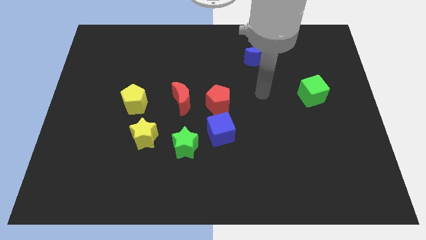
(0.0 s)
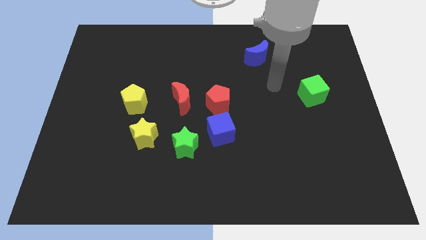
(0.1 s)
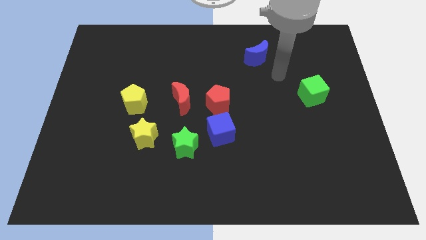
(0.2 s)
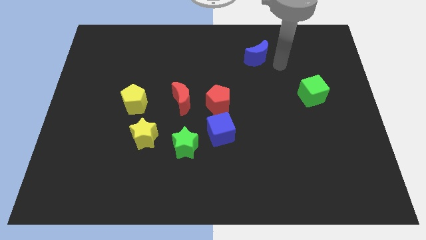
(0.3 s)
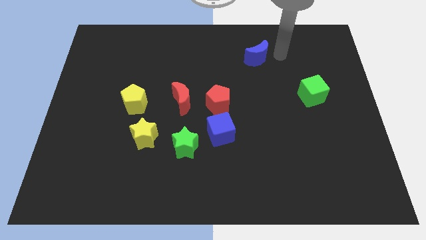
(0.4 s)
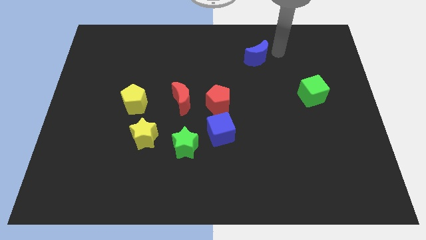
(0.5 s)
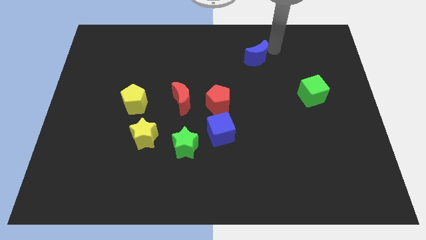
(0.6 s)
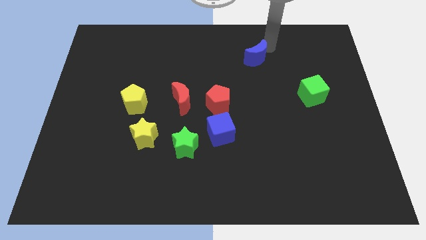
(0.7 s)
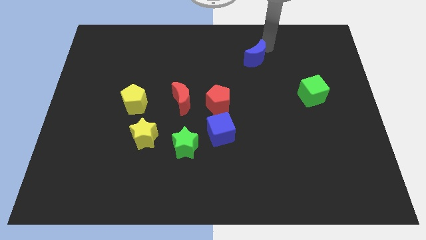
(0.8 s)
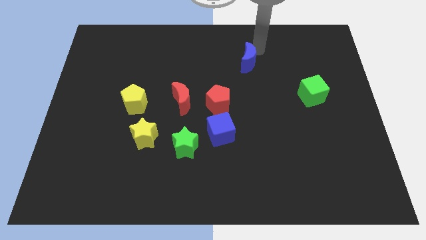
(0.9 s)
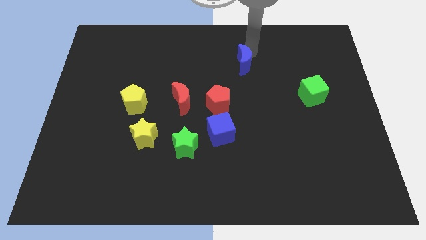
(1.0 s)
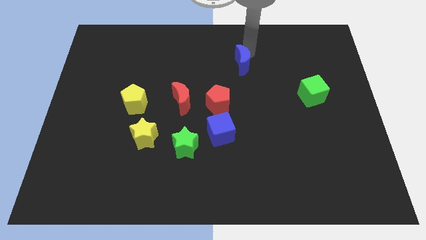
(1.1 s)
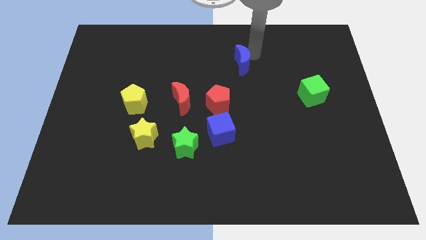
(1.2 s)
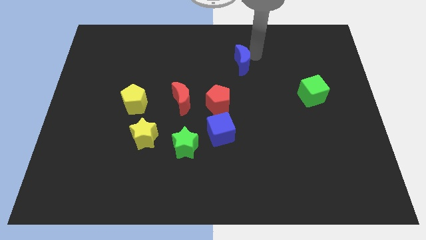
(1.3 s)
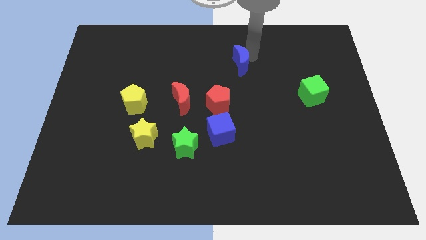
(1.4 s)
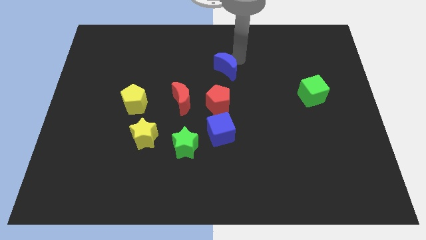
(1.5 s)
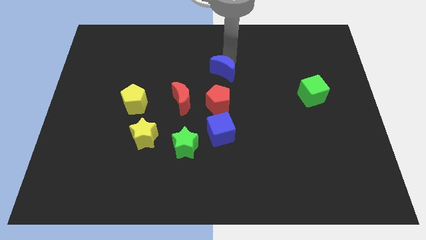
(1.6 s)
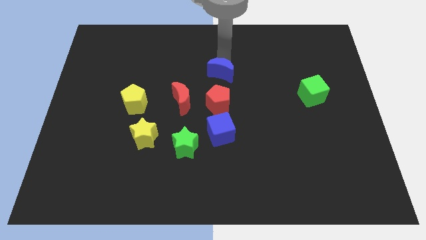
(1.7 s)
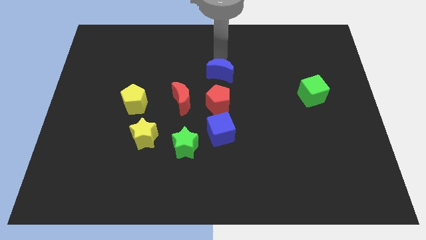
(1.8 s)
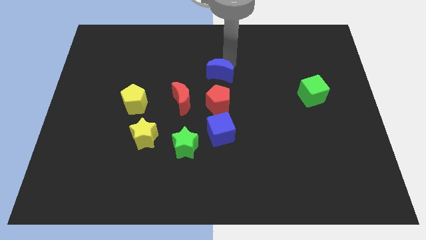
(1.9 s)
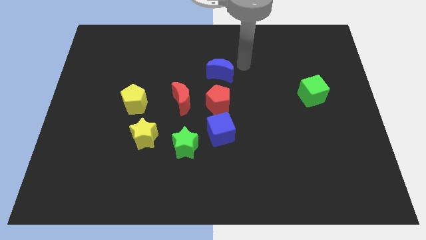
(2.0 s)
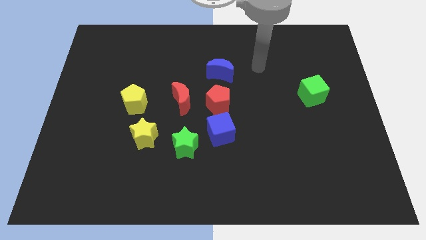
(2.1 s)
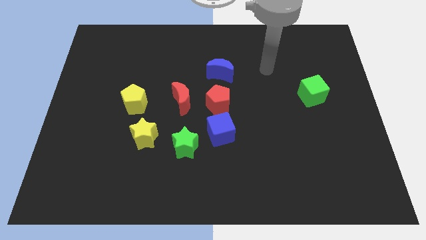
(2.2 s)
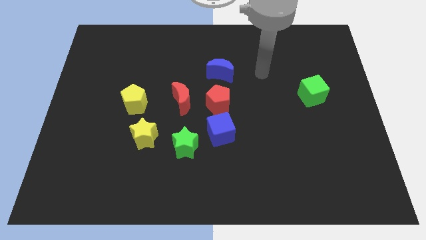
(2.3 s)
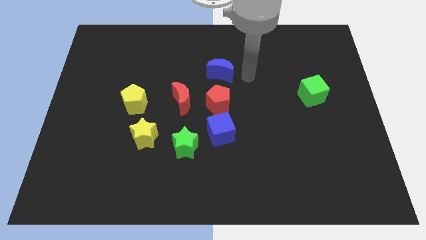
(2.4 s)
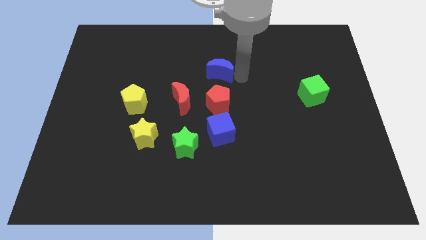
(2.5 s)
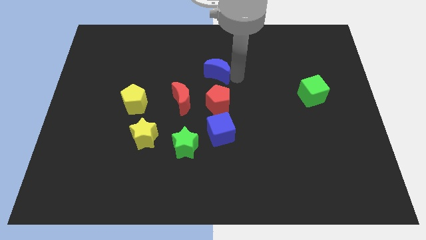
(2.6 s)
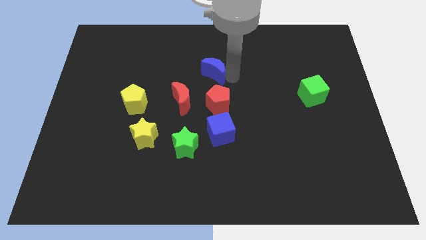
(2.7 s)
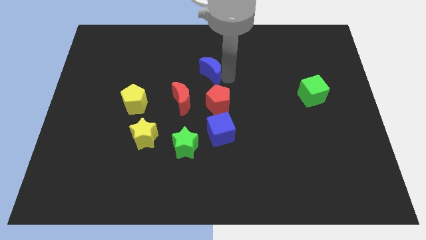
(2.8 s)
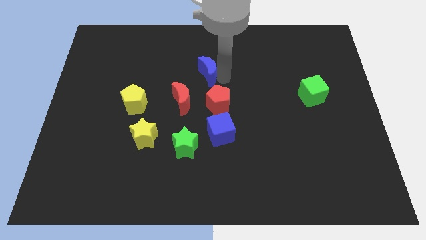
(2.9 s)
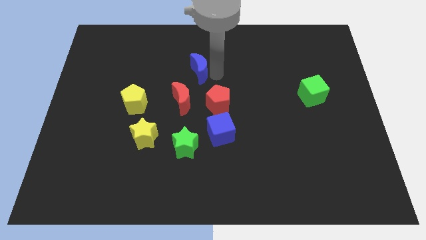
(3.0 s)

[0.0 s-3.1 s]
push blue moon to the top left of red pentagon

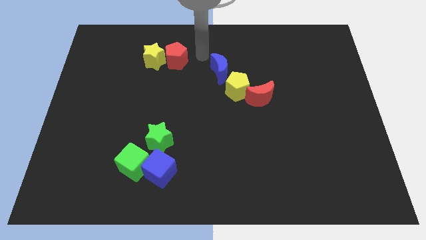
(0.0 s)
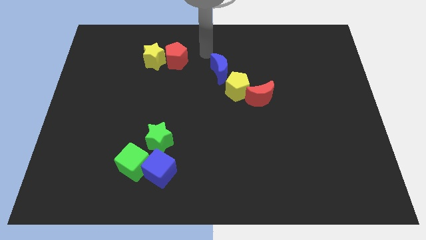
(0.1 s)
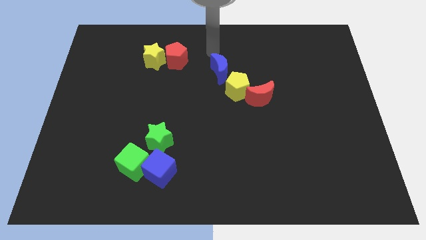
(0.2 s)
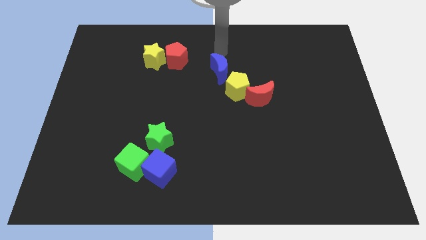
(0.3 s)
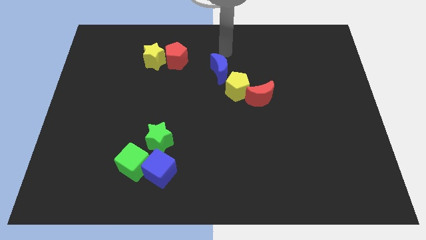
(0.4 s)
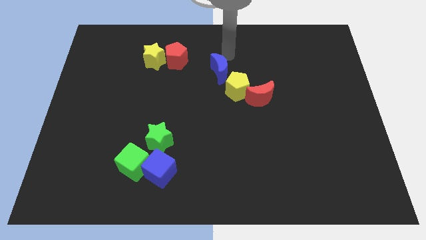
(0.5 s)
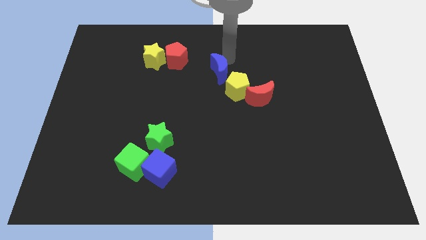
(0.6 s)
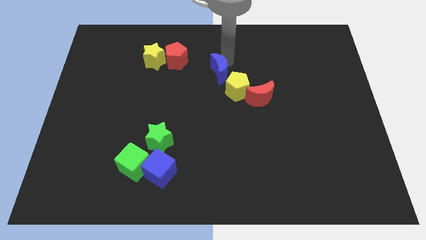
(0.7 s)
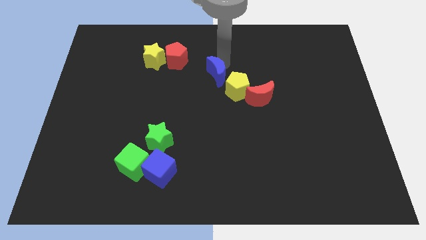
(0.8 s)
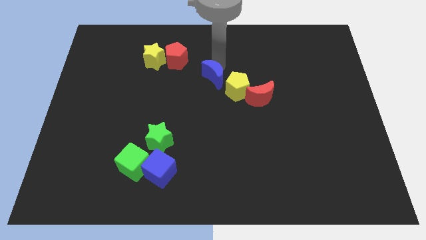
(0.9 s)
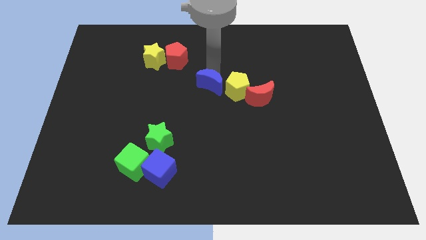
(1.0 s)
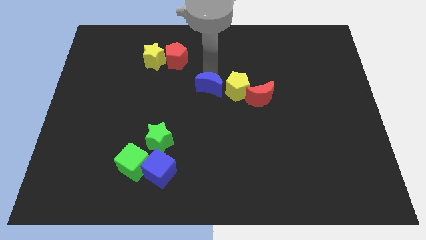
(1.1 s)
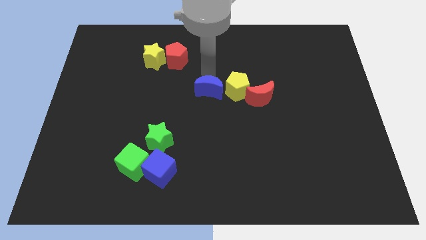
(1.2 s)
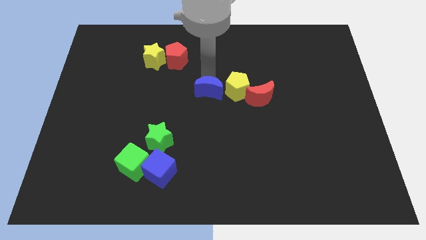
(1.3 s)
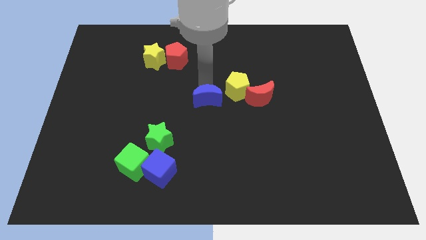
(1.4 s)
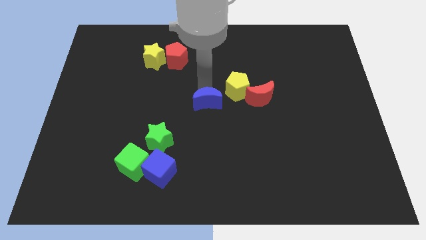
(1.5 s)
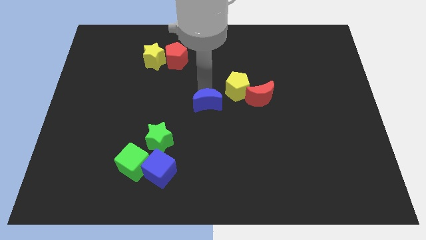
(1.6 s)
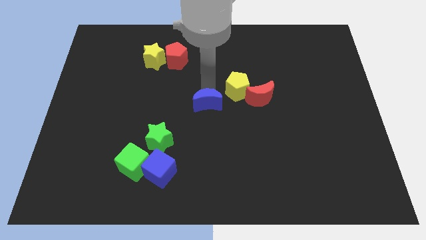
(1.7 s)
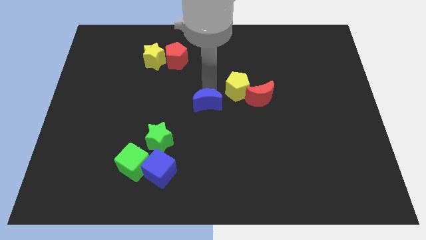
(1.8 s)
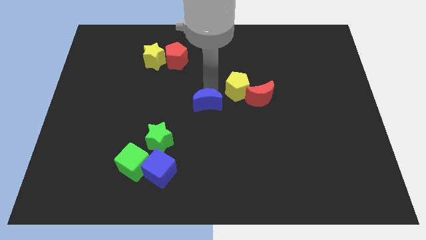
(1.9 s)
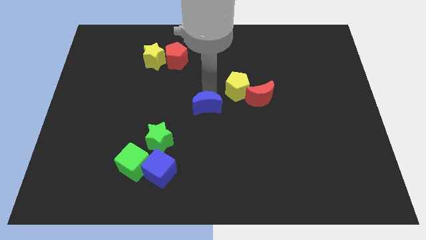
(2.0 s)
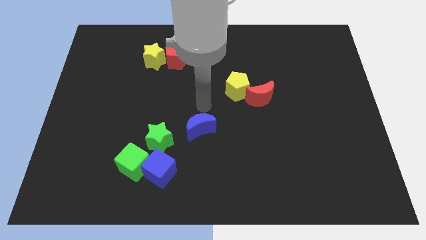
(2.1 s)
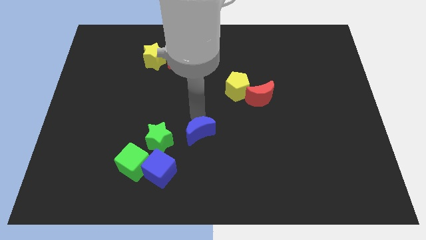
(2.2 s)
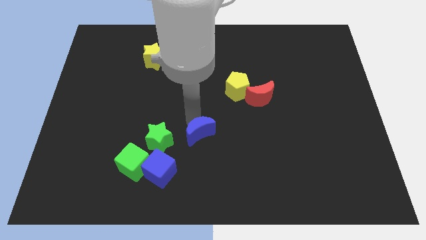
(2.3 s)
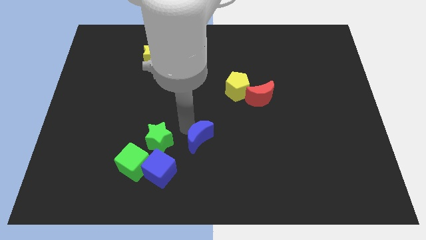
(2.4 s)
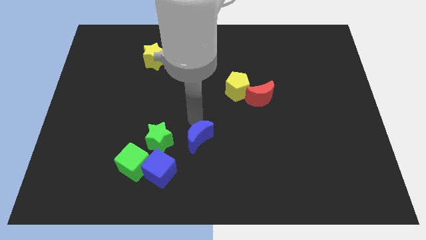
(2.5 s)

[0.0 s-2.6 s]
push blue crescent top right to green star

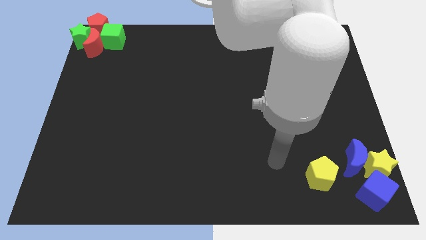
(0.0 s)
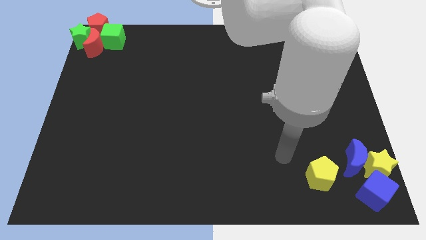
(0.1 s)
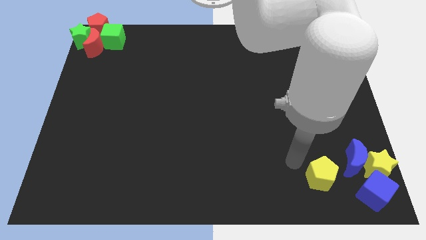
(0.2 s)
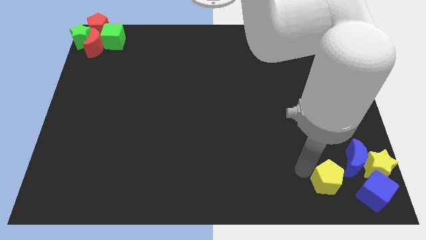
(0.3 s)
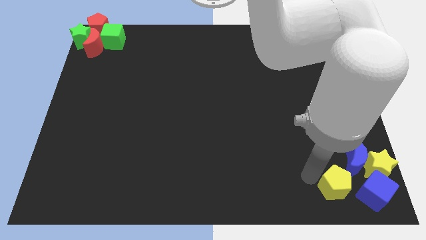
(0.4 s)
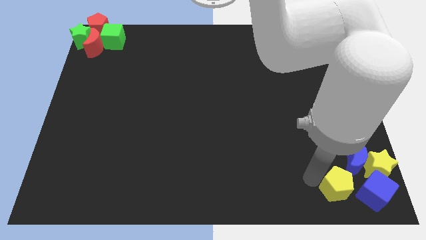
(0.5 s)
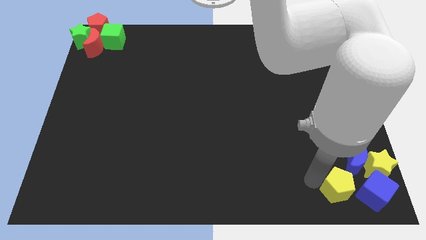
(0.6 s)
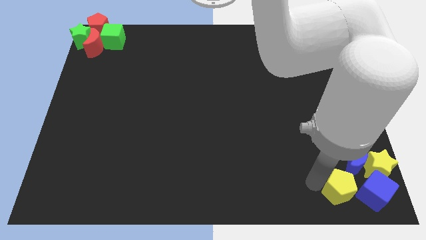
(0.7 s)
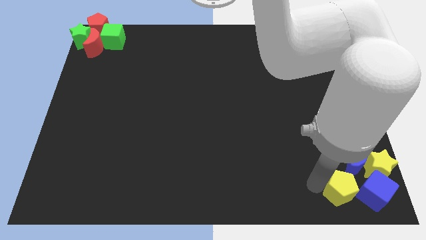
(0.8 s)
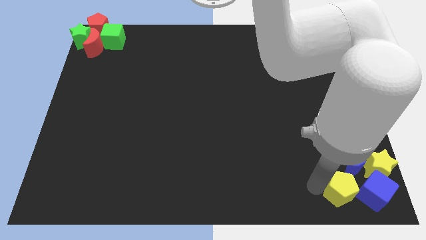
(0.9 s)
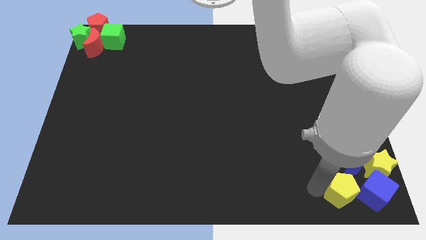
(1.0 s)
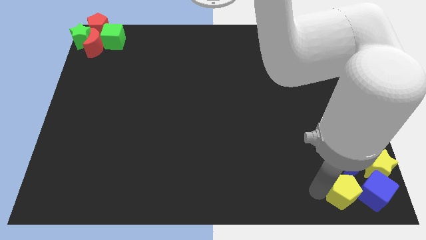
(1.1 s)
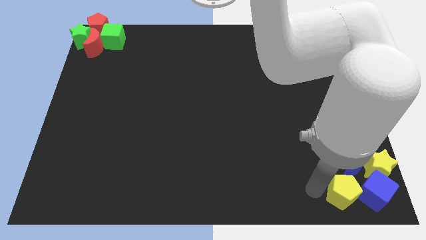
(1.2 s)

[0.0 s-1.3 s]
place the yellow pentagon left to the blue cube

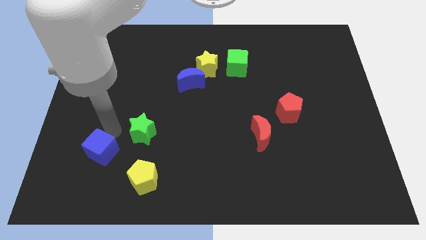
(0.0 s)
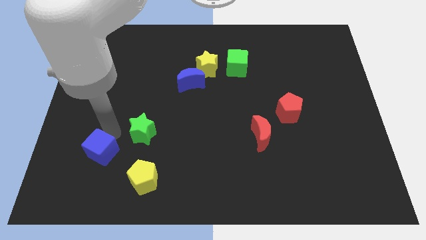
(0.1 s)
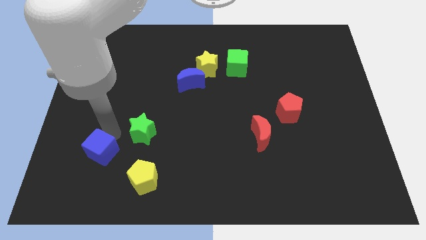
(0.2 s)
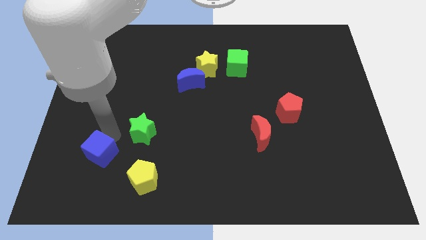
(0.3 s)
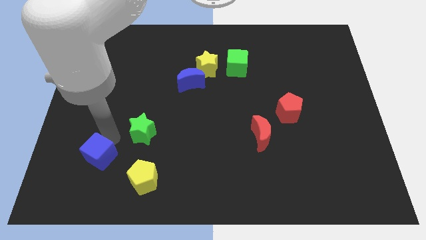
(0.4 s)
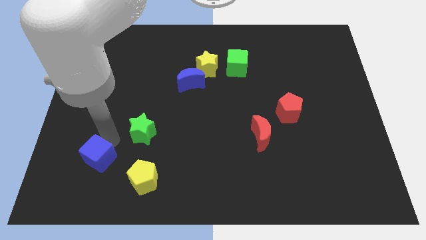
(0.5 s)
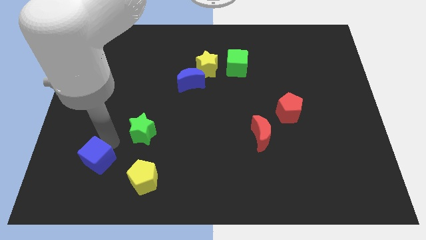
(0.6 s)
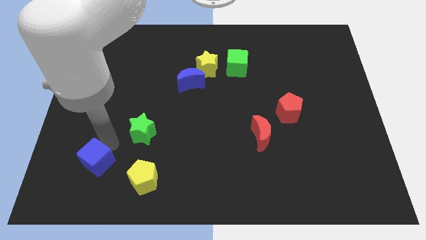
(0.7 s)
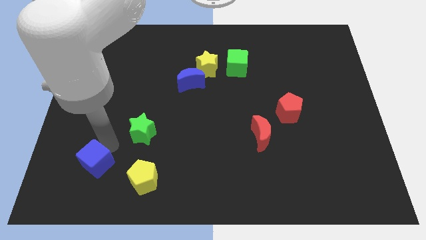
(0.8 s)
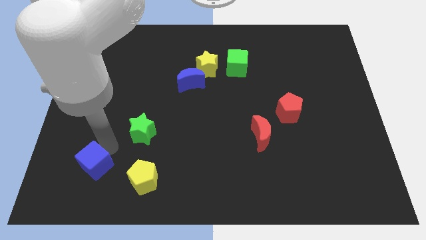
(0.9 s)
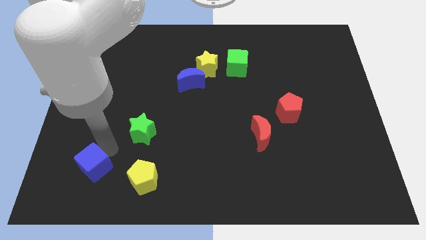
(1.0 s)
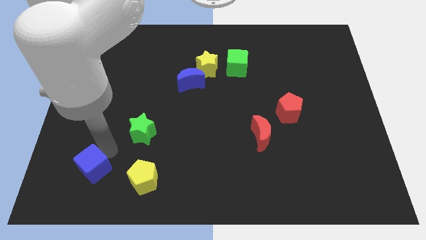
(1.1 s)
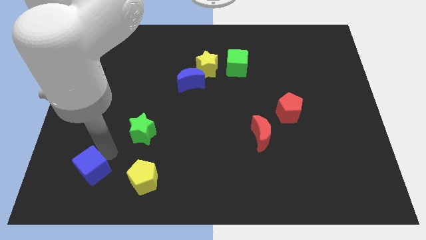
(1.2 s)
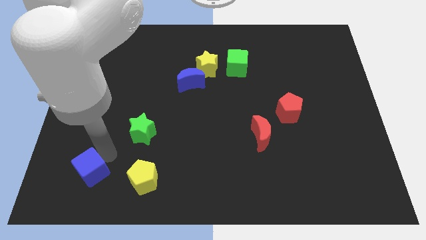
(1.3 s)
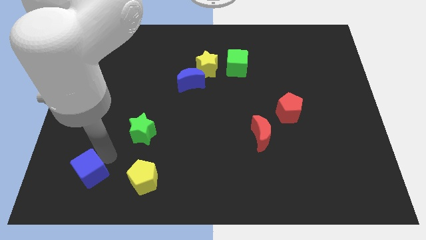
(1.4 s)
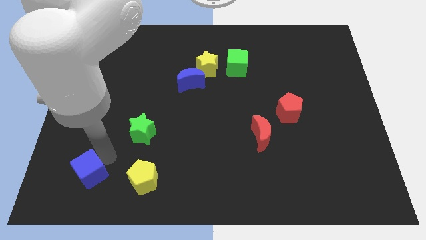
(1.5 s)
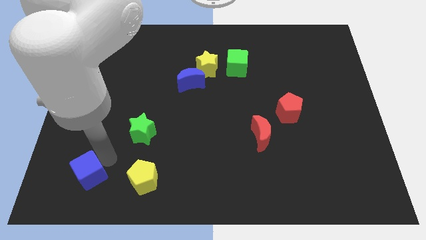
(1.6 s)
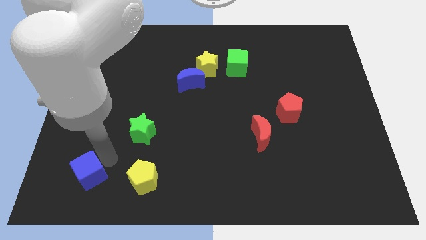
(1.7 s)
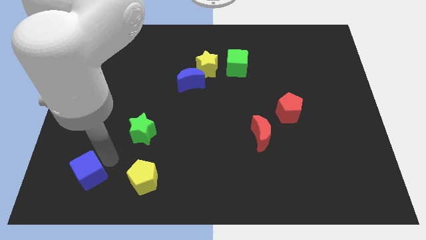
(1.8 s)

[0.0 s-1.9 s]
move the blue cube to the left side of the yellow pentagon
